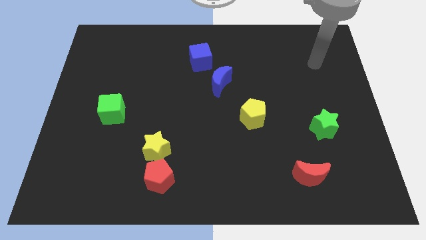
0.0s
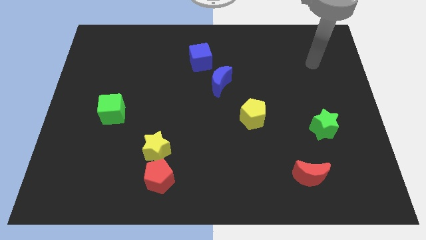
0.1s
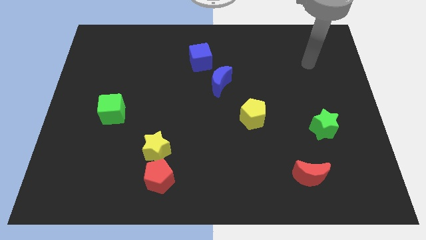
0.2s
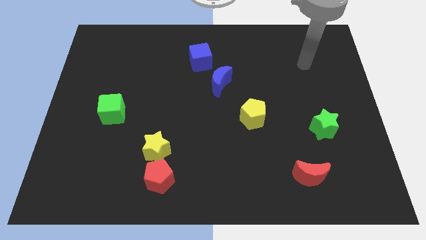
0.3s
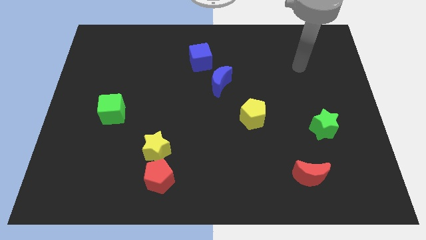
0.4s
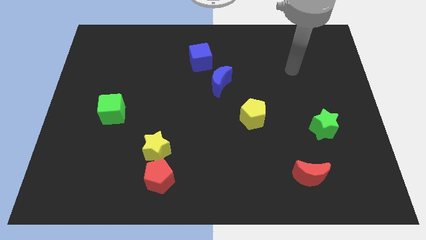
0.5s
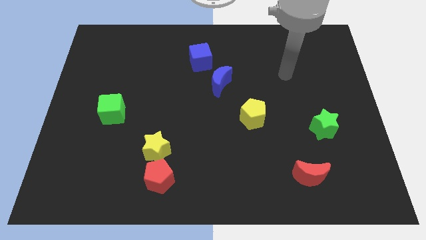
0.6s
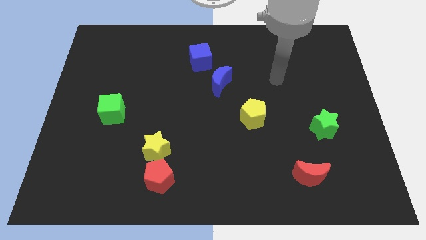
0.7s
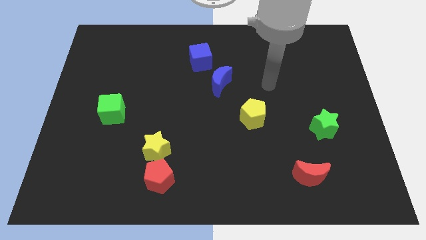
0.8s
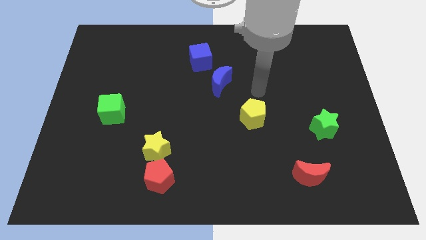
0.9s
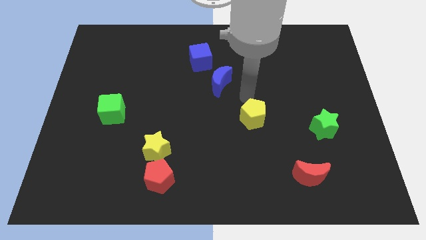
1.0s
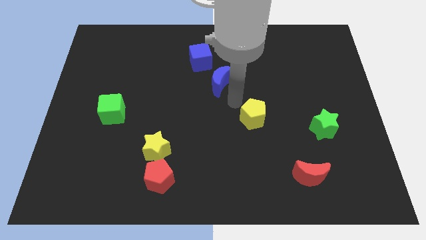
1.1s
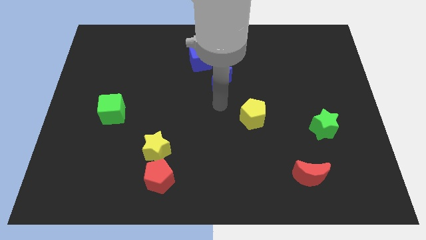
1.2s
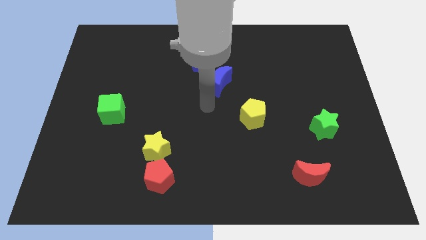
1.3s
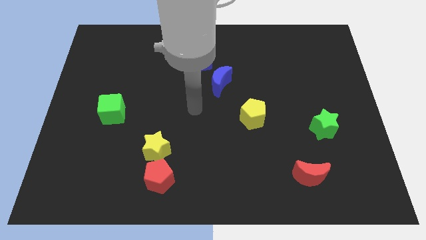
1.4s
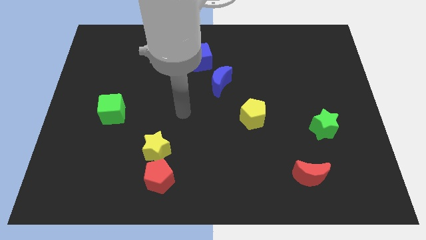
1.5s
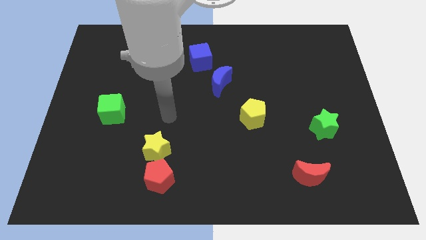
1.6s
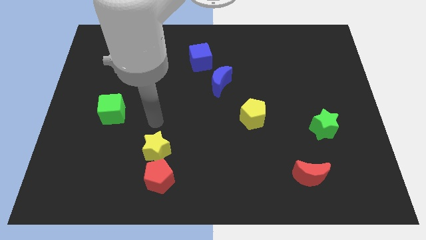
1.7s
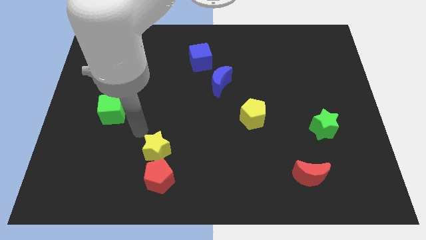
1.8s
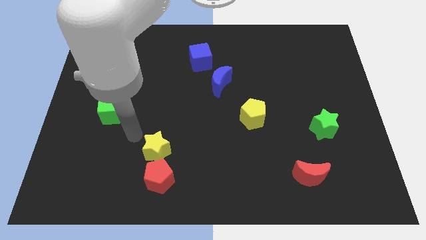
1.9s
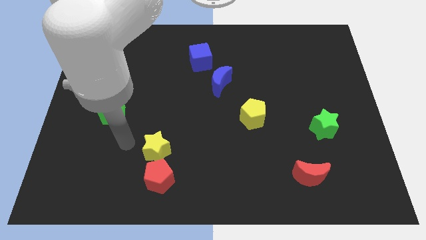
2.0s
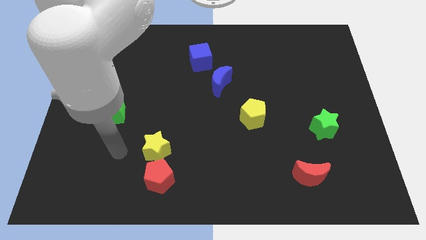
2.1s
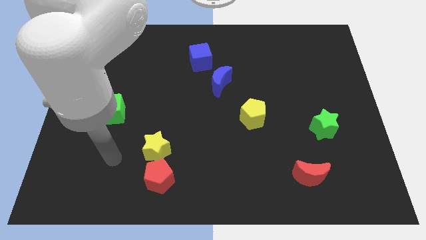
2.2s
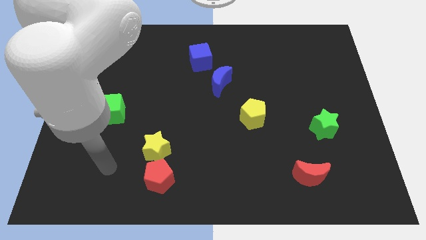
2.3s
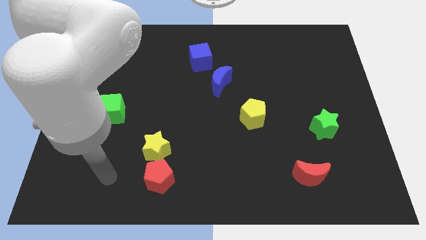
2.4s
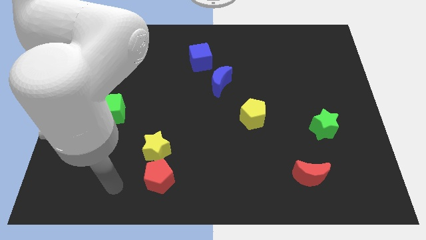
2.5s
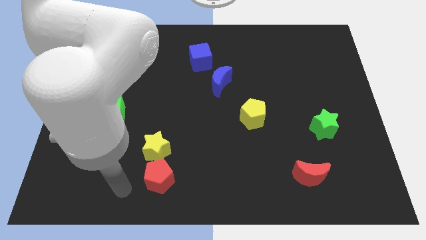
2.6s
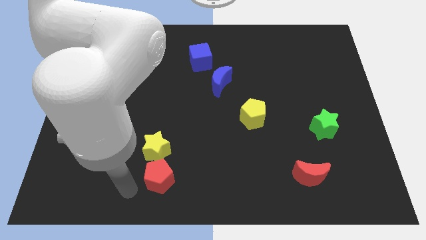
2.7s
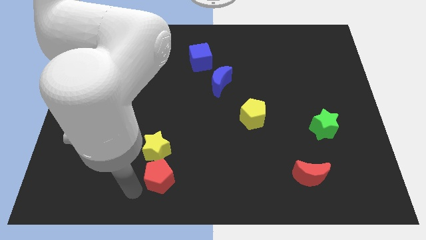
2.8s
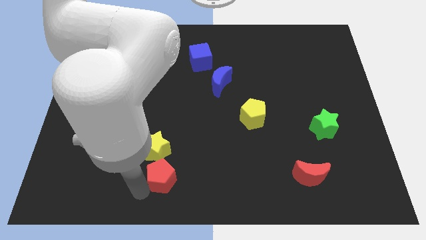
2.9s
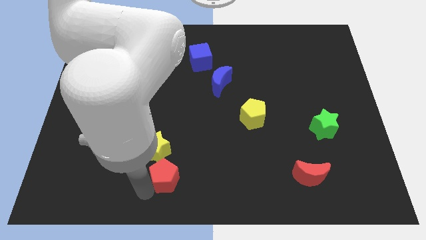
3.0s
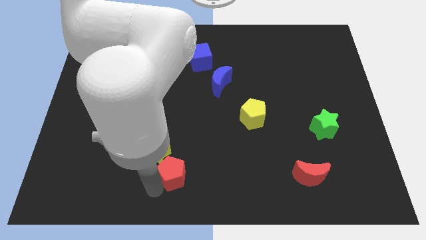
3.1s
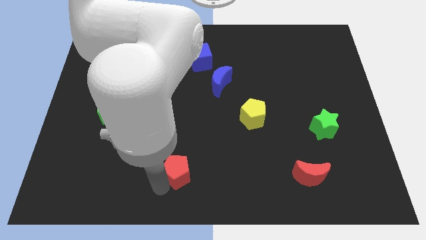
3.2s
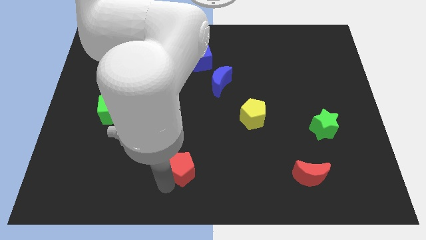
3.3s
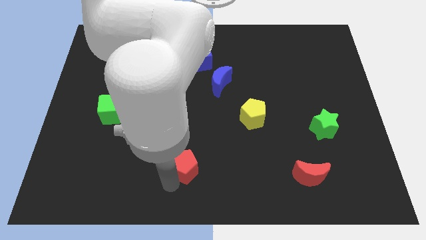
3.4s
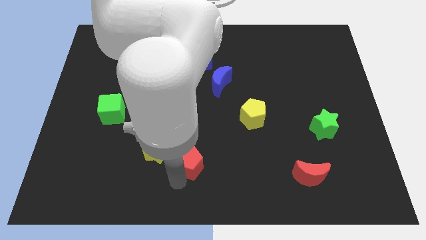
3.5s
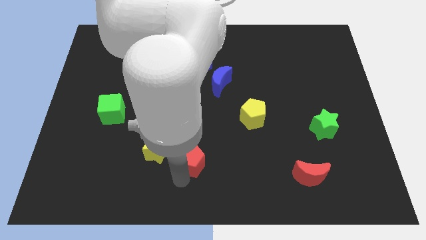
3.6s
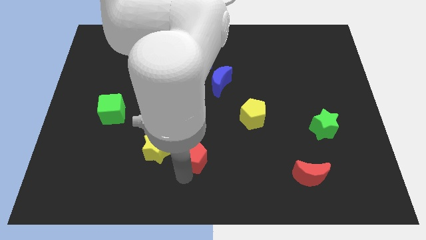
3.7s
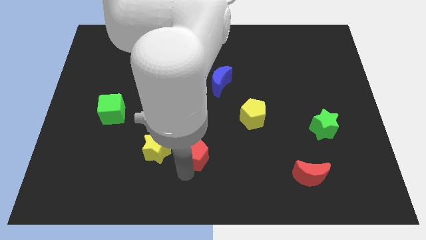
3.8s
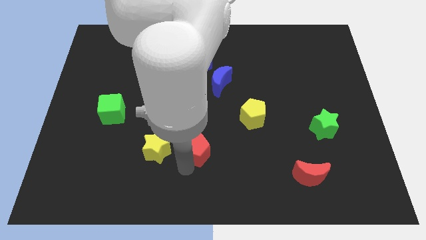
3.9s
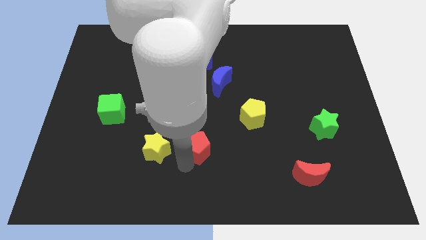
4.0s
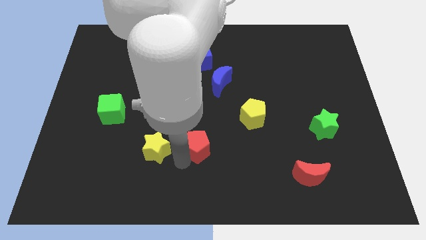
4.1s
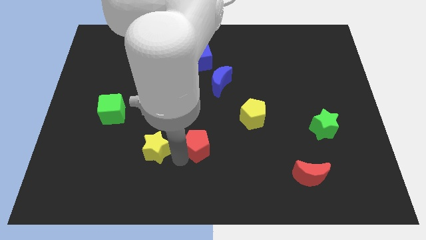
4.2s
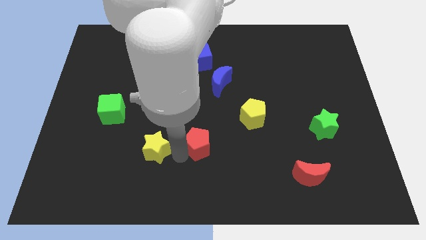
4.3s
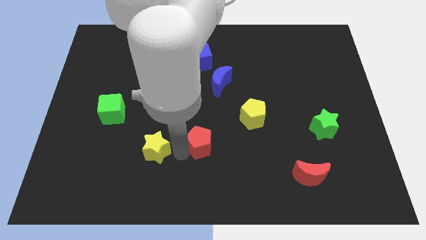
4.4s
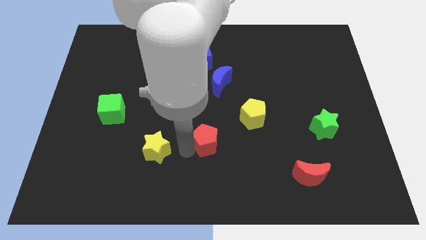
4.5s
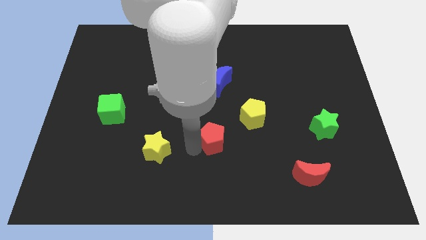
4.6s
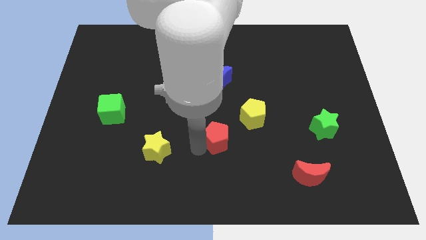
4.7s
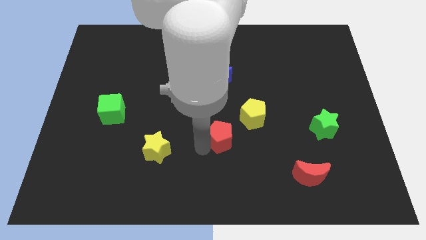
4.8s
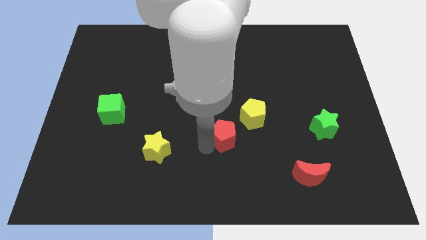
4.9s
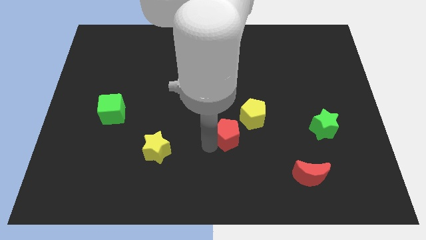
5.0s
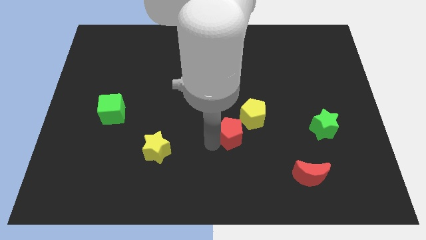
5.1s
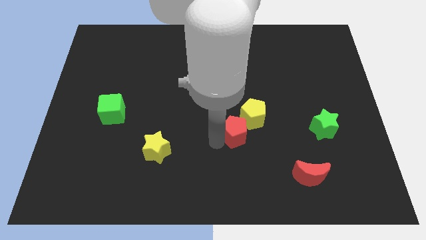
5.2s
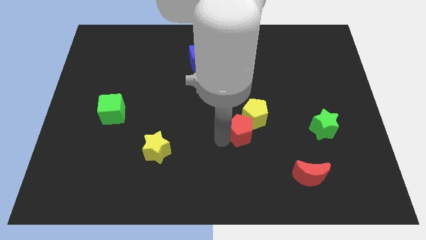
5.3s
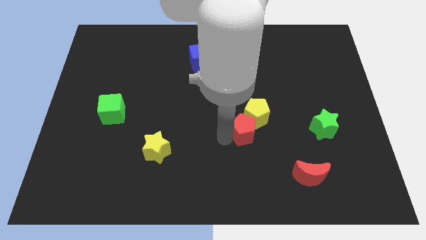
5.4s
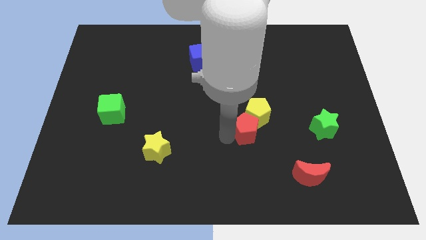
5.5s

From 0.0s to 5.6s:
put the red pentagon next to the yellow pentagon

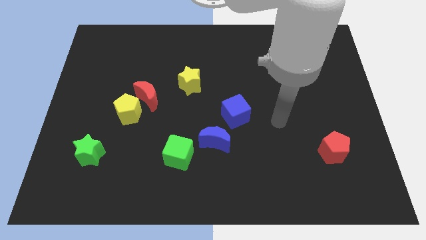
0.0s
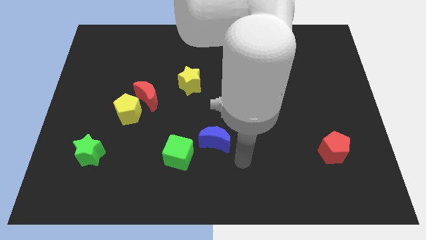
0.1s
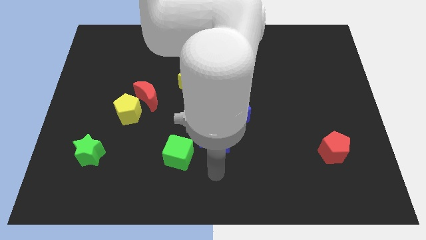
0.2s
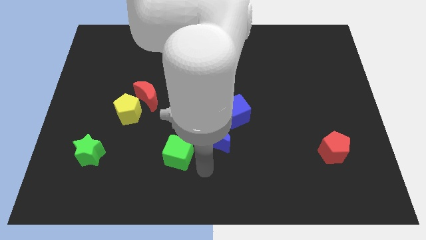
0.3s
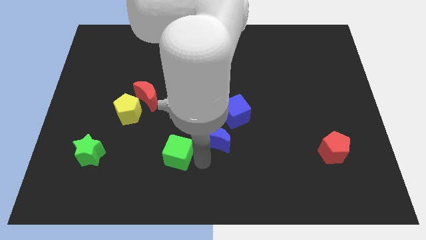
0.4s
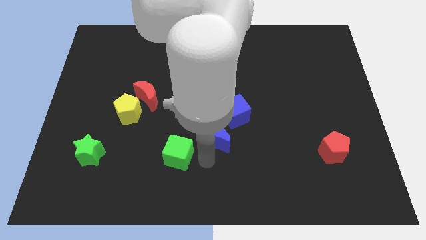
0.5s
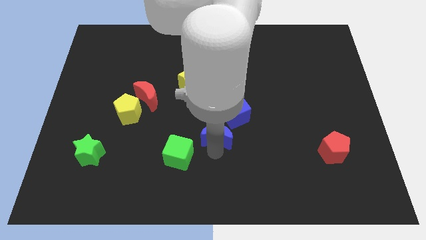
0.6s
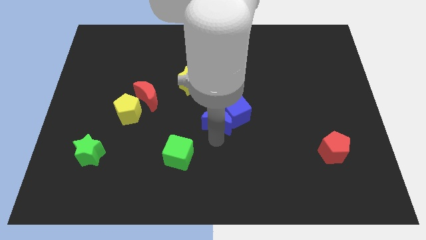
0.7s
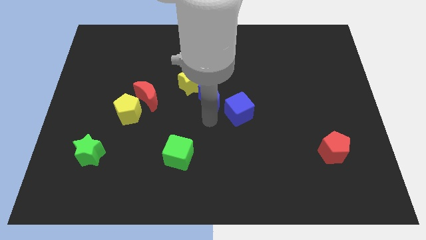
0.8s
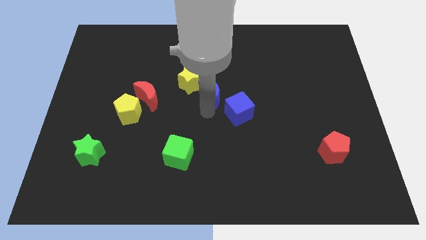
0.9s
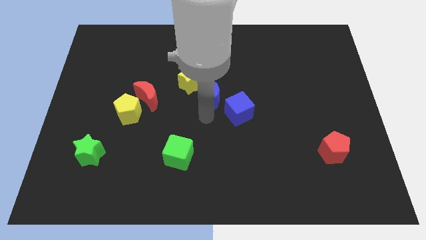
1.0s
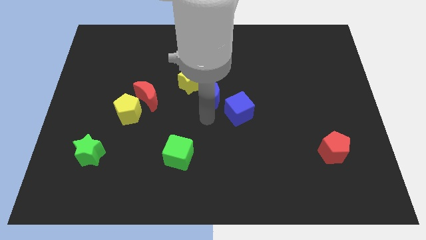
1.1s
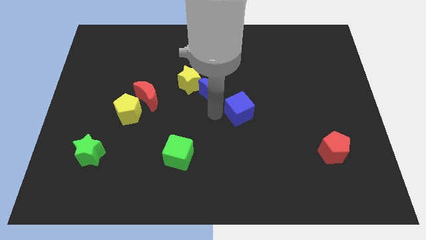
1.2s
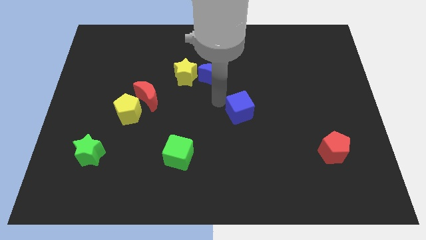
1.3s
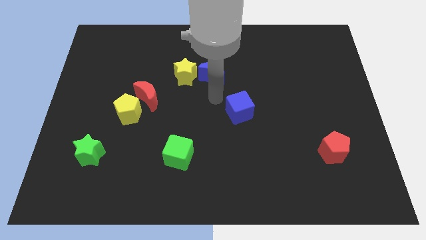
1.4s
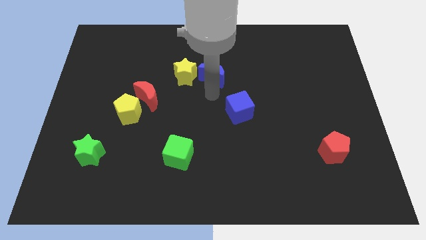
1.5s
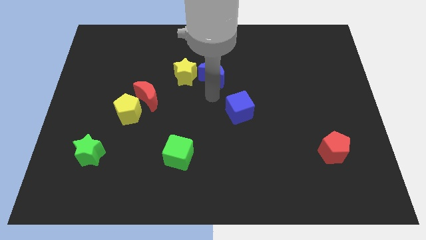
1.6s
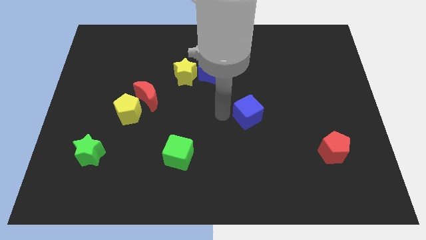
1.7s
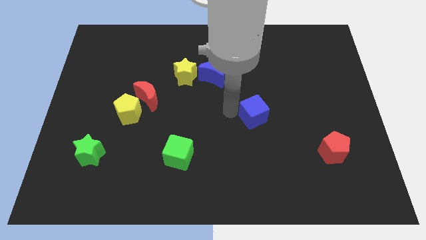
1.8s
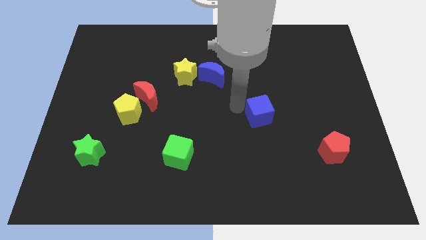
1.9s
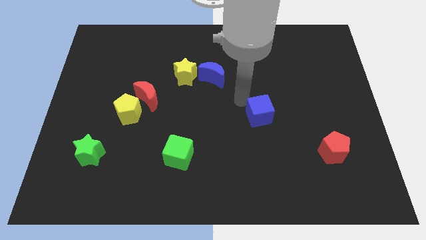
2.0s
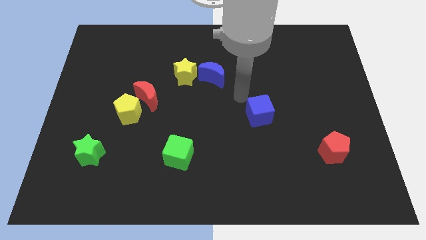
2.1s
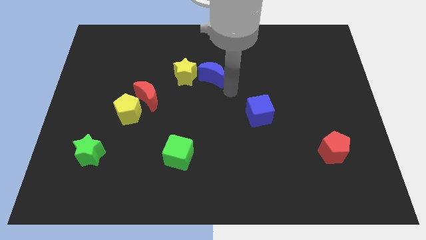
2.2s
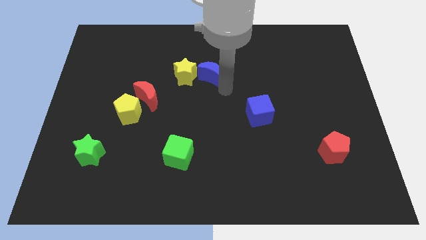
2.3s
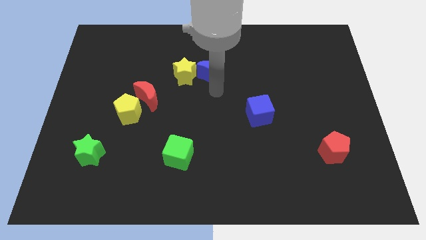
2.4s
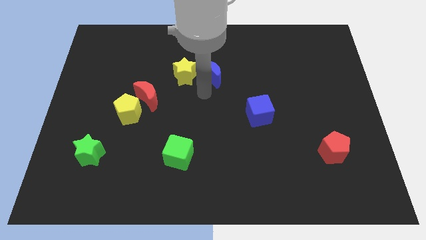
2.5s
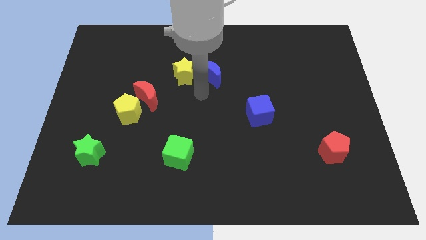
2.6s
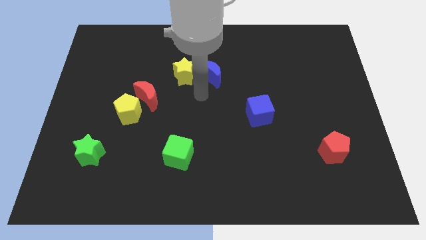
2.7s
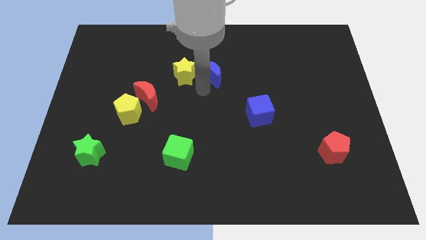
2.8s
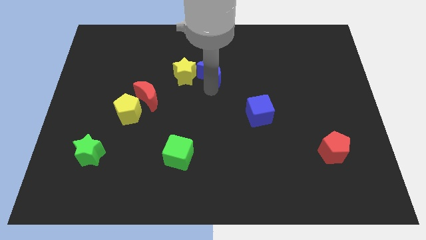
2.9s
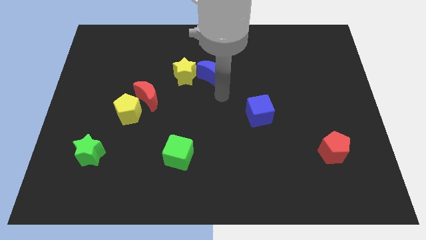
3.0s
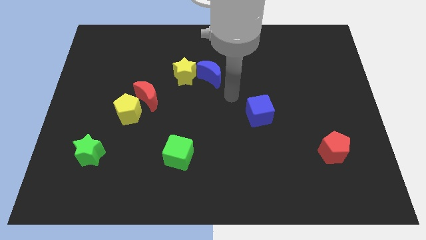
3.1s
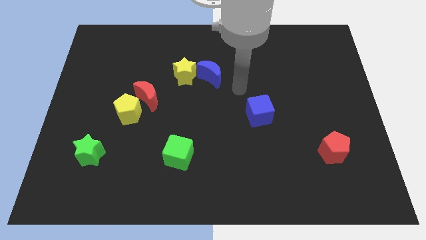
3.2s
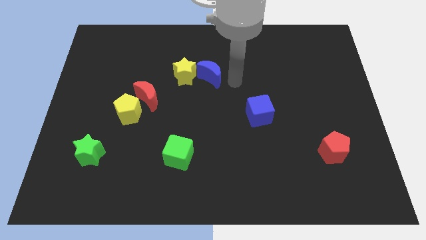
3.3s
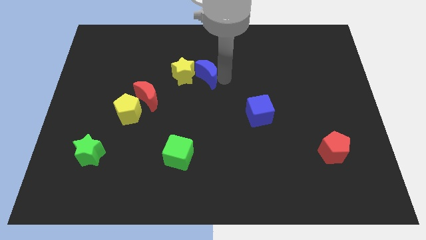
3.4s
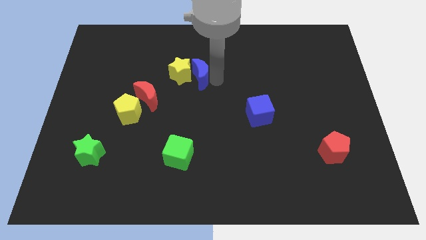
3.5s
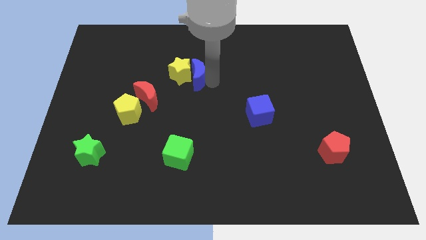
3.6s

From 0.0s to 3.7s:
put the blue moon close to the yellow star
